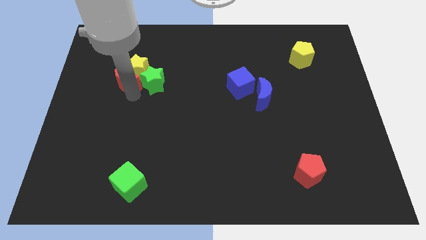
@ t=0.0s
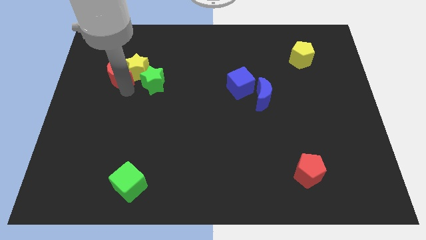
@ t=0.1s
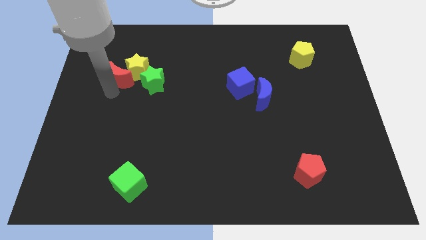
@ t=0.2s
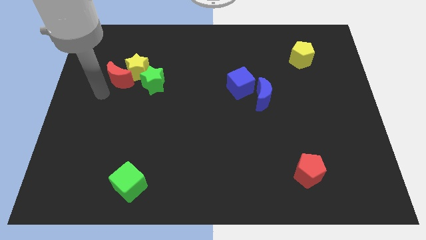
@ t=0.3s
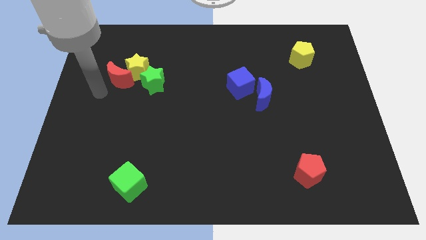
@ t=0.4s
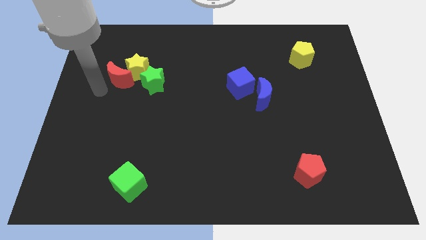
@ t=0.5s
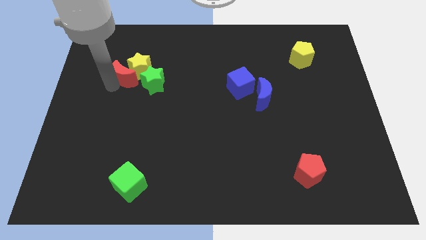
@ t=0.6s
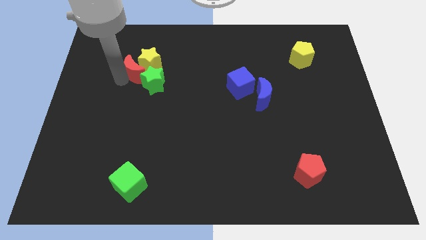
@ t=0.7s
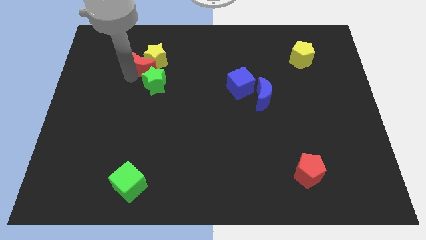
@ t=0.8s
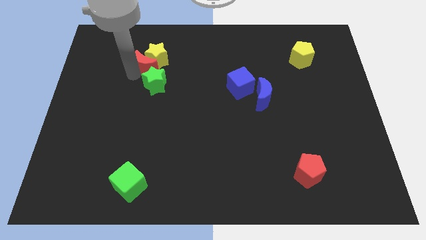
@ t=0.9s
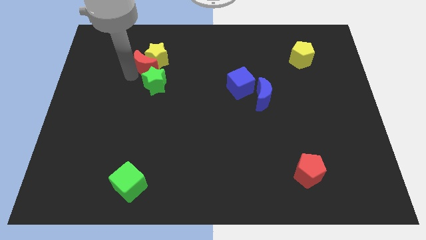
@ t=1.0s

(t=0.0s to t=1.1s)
push red moon into yellow star

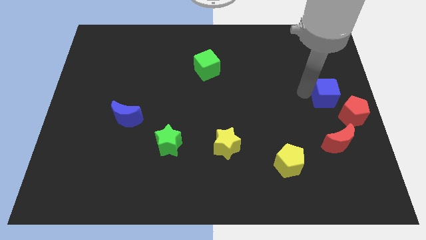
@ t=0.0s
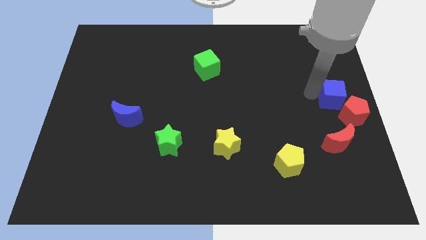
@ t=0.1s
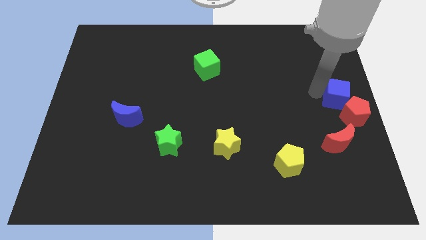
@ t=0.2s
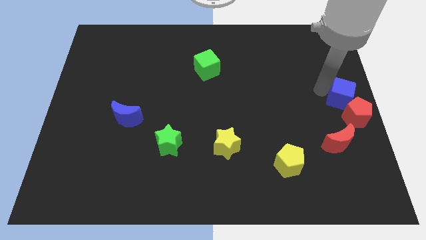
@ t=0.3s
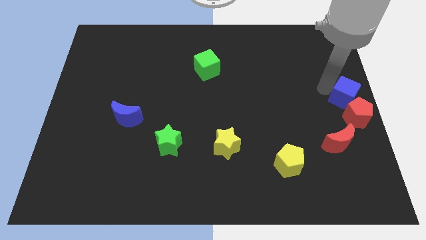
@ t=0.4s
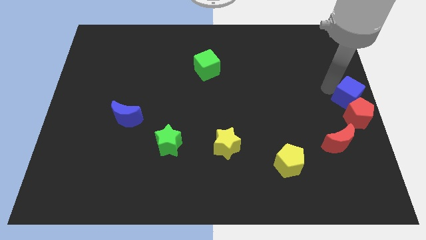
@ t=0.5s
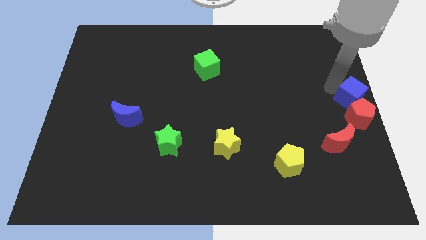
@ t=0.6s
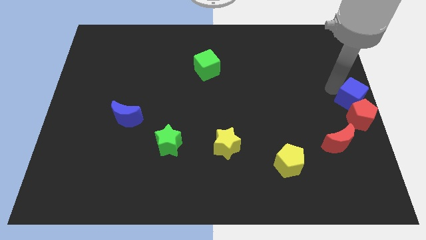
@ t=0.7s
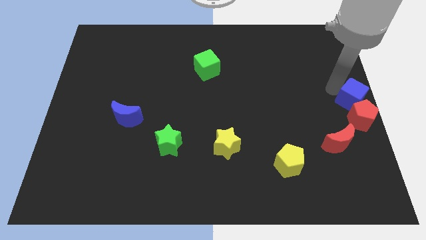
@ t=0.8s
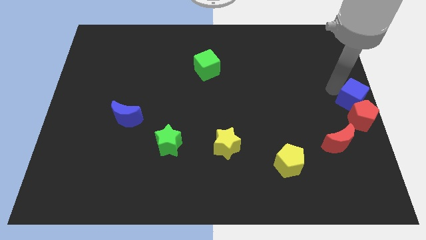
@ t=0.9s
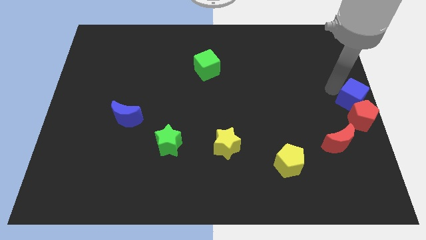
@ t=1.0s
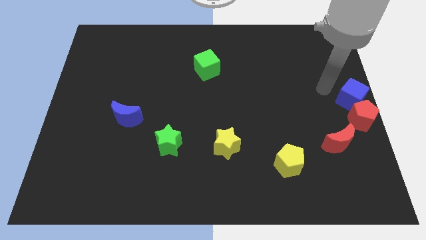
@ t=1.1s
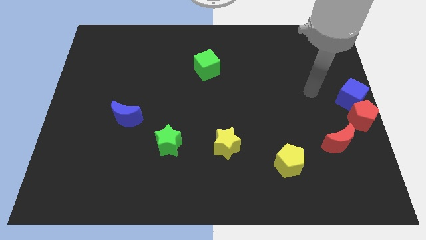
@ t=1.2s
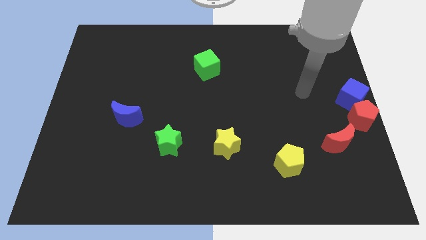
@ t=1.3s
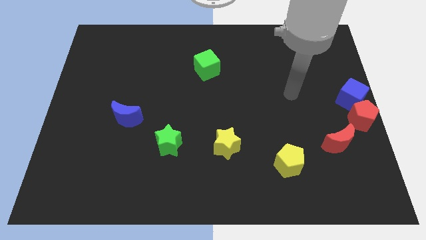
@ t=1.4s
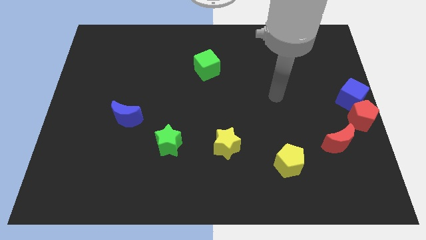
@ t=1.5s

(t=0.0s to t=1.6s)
place blue cube above red pentagon

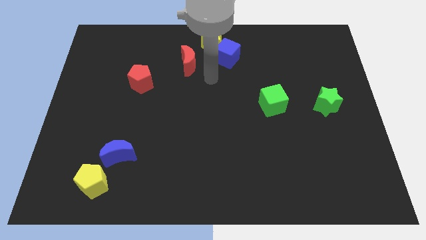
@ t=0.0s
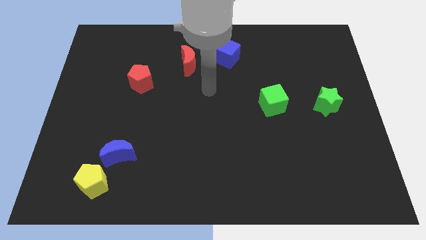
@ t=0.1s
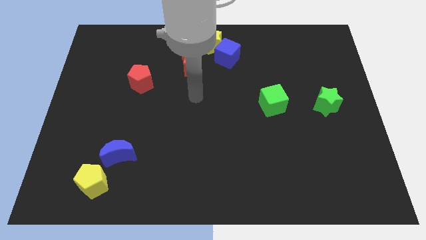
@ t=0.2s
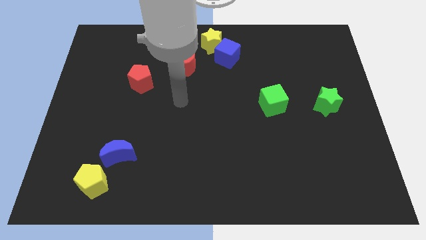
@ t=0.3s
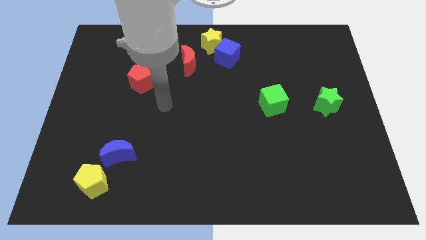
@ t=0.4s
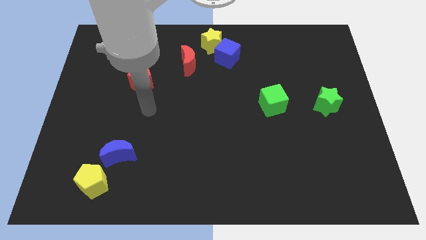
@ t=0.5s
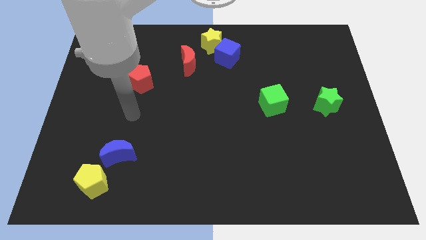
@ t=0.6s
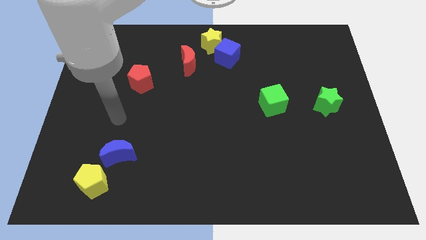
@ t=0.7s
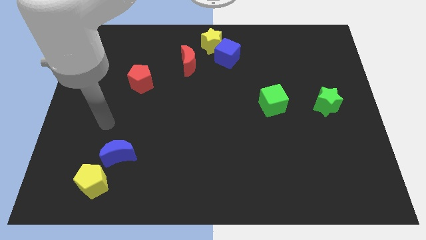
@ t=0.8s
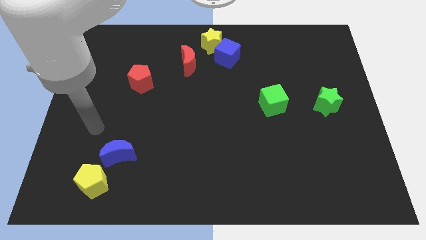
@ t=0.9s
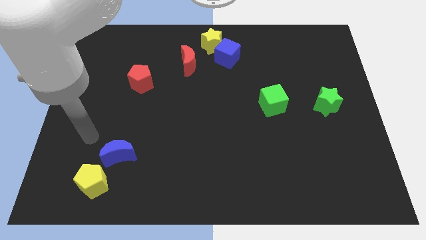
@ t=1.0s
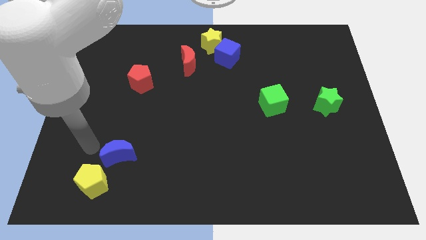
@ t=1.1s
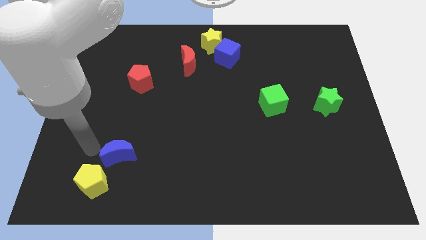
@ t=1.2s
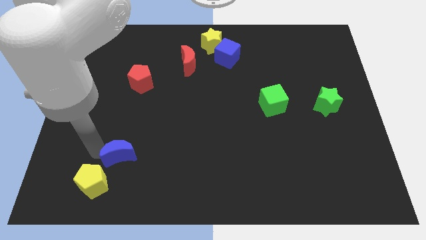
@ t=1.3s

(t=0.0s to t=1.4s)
point your arm at the left of the blue crescent

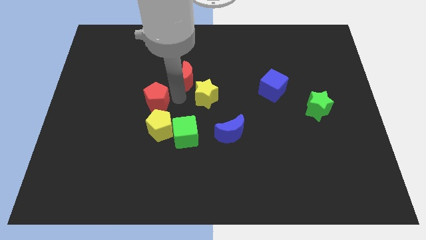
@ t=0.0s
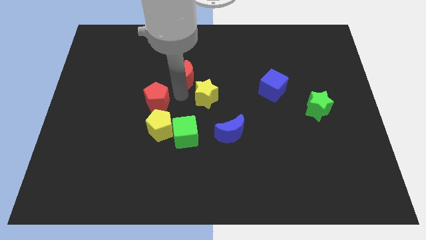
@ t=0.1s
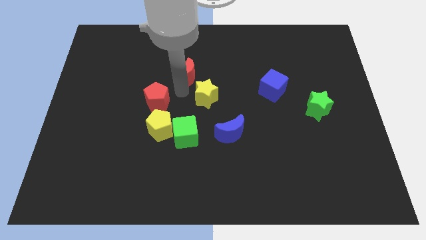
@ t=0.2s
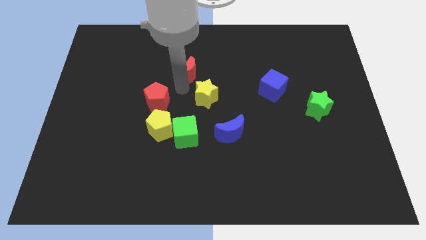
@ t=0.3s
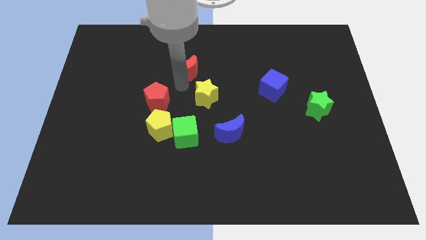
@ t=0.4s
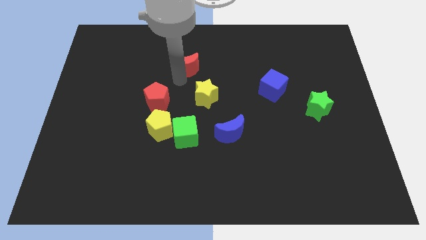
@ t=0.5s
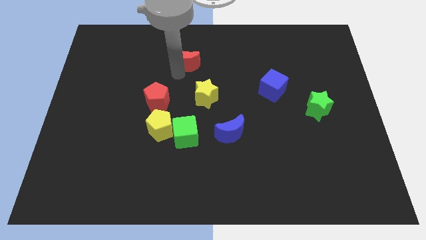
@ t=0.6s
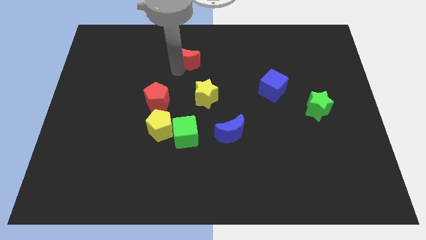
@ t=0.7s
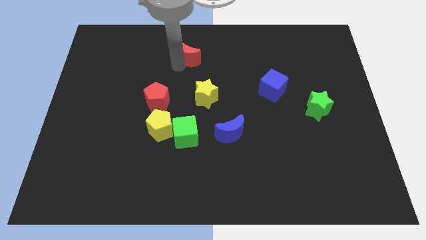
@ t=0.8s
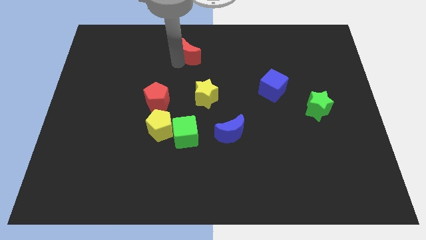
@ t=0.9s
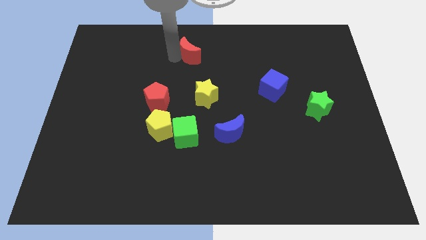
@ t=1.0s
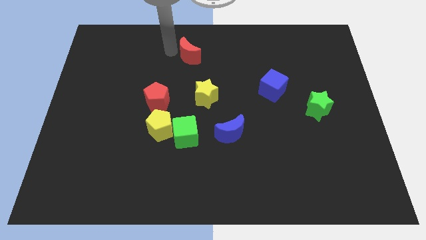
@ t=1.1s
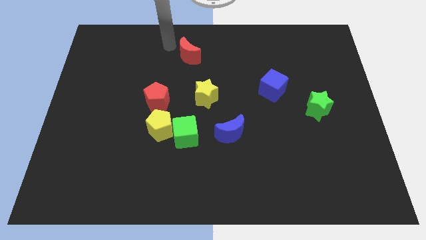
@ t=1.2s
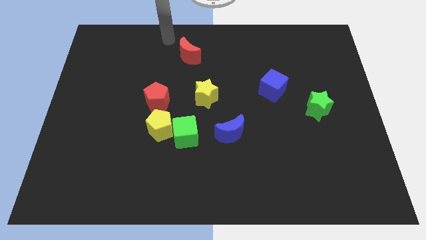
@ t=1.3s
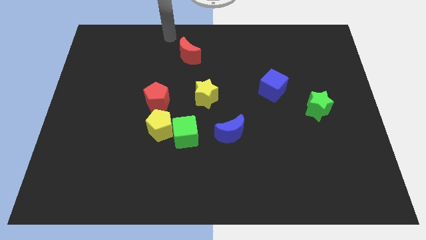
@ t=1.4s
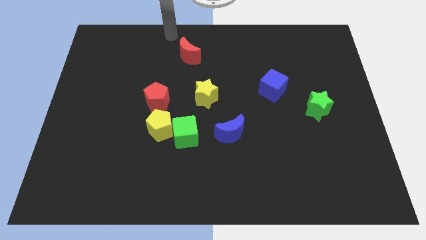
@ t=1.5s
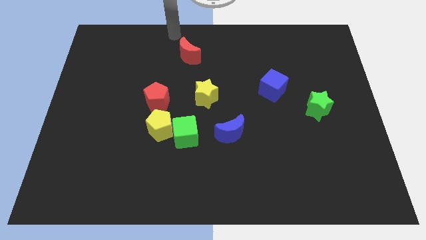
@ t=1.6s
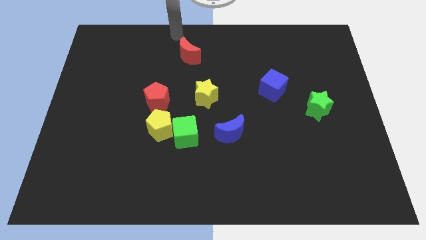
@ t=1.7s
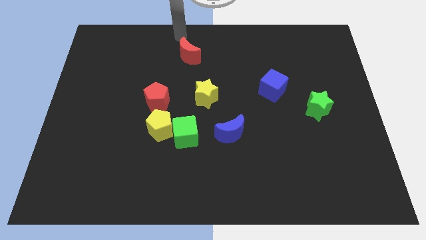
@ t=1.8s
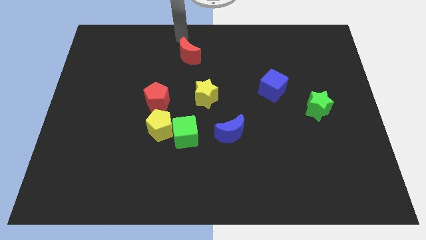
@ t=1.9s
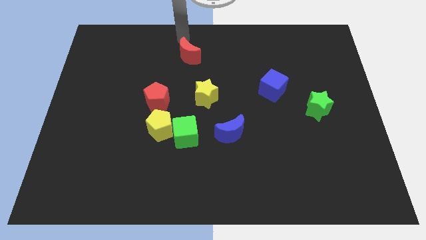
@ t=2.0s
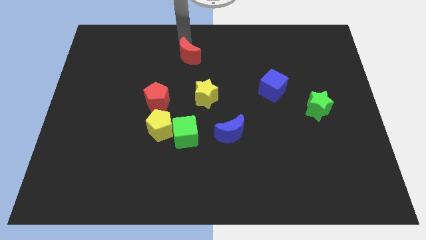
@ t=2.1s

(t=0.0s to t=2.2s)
push the red crescent away from the red pentagon to the top of yellow star

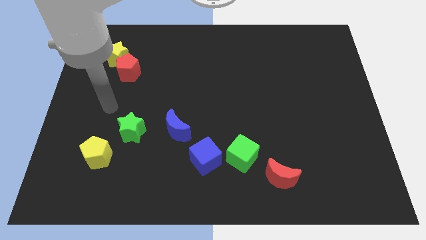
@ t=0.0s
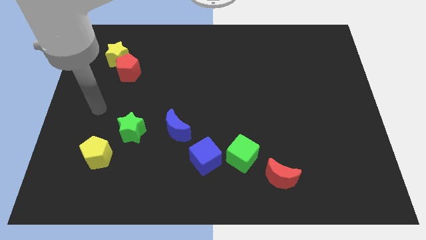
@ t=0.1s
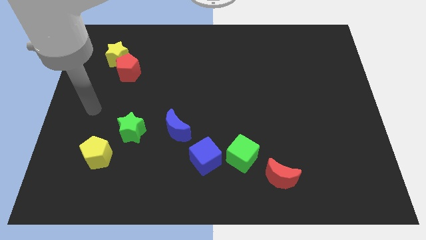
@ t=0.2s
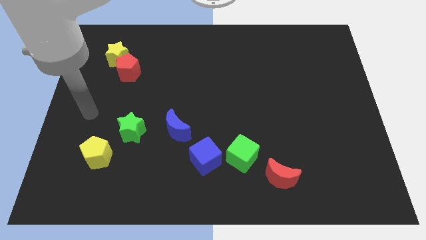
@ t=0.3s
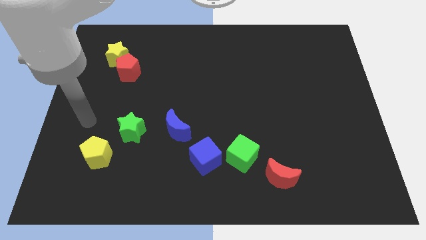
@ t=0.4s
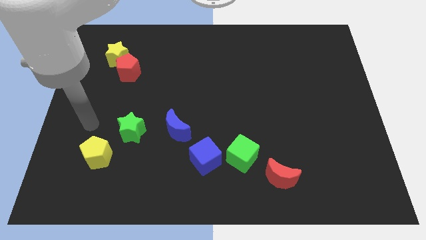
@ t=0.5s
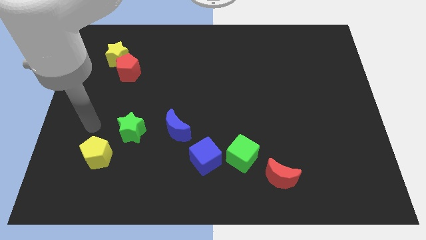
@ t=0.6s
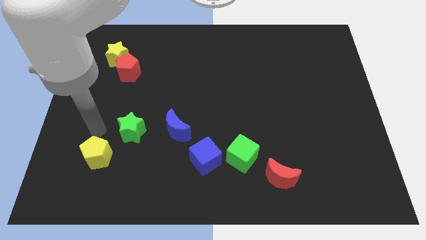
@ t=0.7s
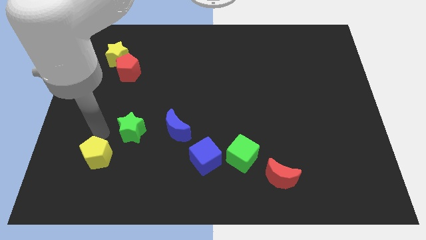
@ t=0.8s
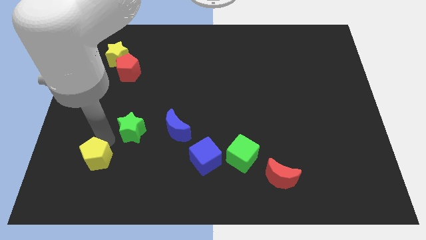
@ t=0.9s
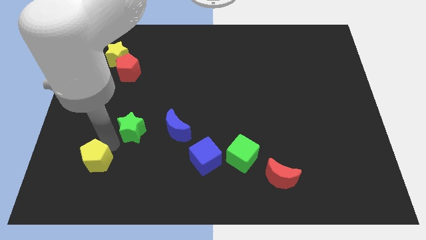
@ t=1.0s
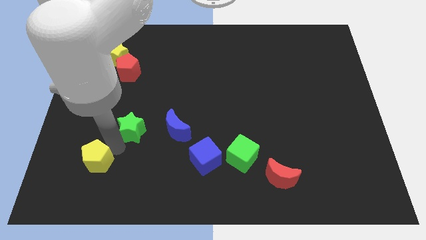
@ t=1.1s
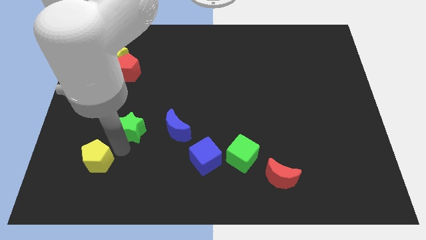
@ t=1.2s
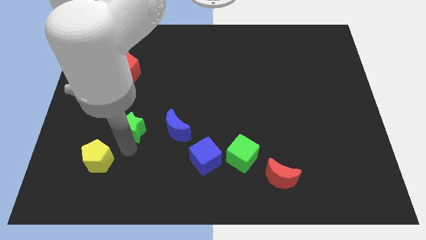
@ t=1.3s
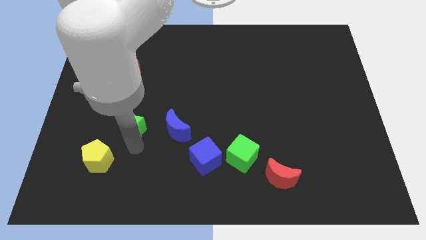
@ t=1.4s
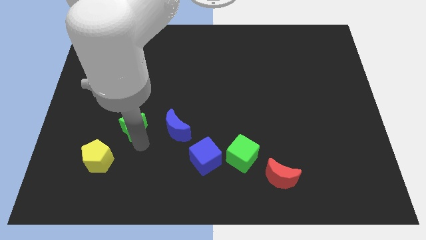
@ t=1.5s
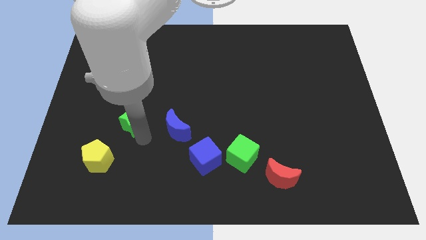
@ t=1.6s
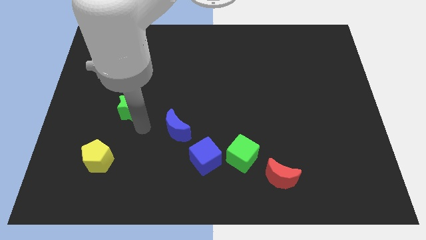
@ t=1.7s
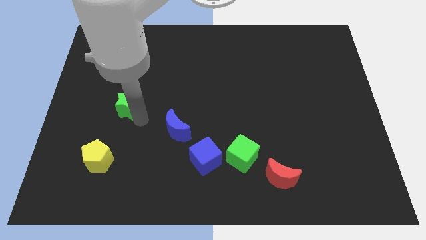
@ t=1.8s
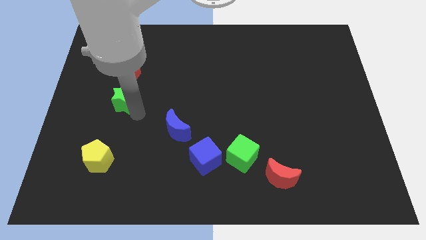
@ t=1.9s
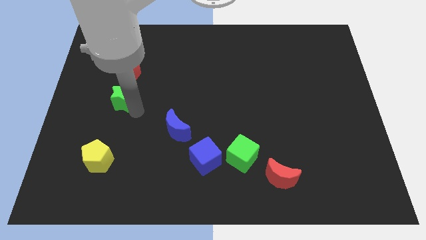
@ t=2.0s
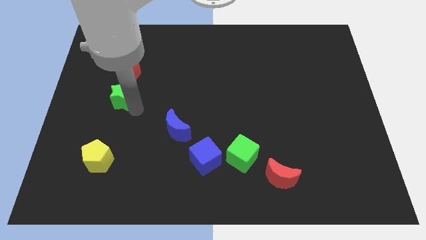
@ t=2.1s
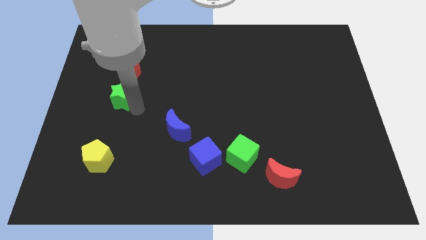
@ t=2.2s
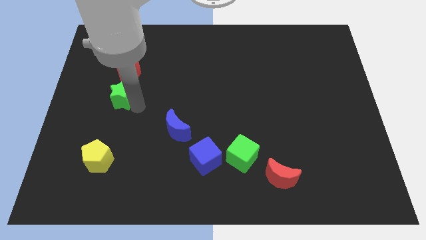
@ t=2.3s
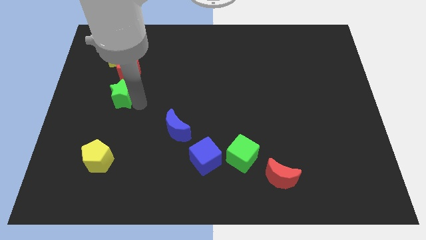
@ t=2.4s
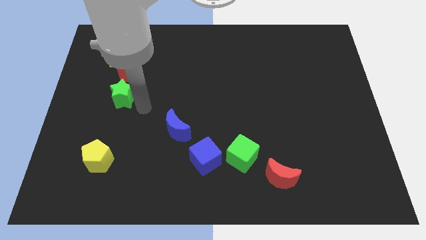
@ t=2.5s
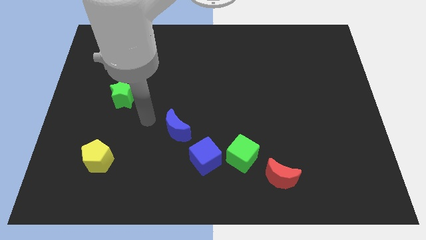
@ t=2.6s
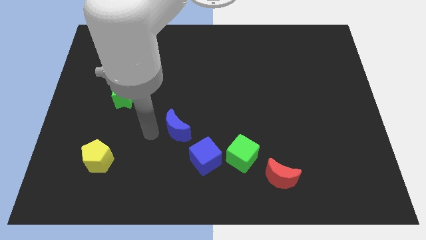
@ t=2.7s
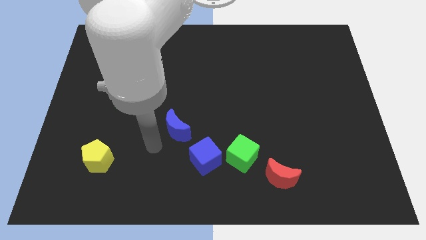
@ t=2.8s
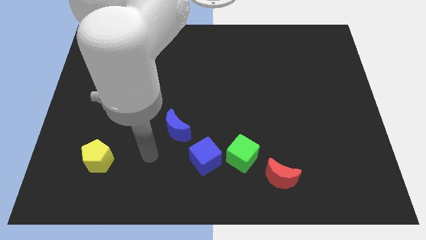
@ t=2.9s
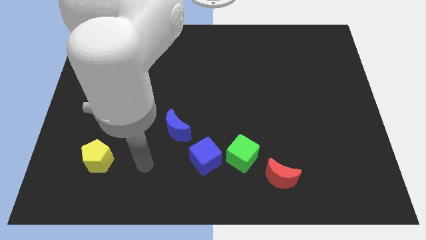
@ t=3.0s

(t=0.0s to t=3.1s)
slide the green star diagonal to the blue cube
